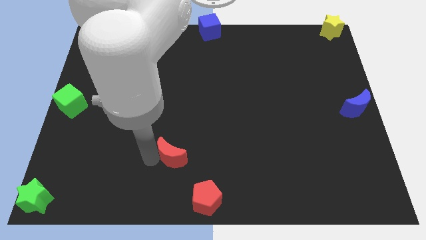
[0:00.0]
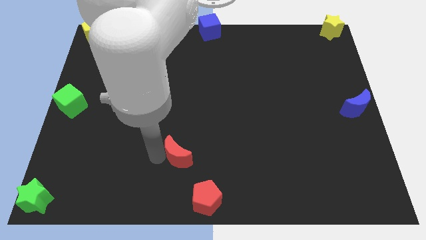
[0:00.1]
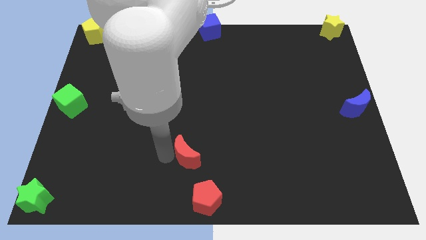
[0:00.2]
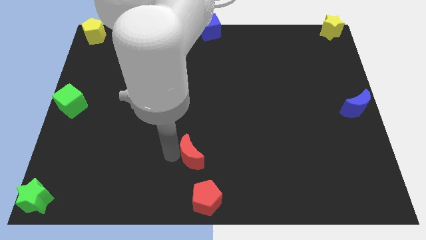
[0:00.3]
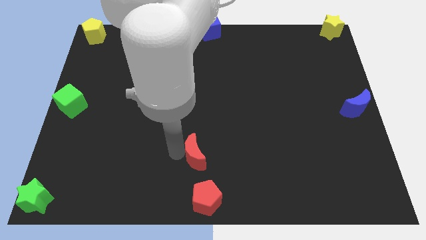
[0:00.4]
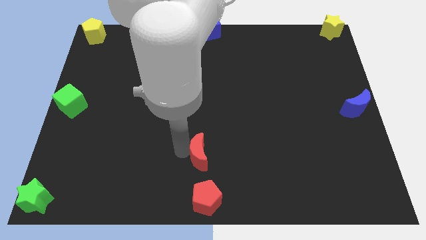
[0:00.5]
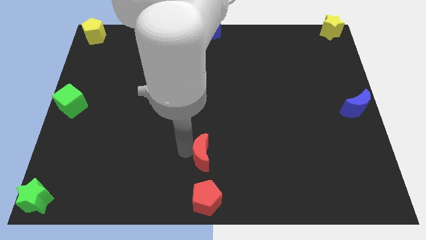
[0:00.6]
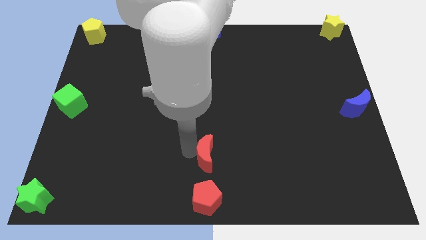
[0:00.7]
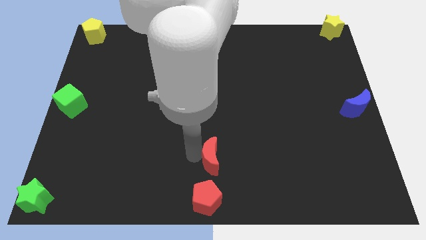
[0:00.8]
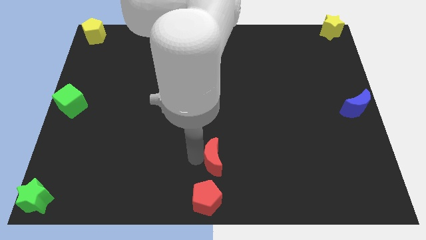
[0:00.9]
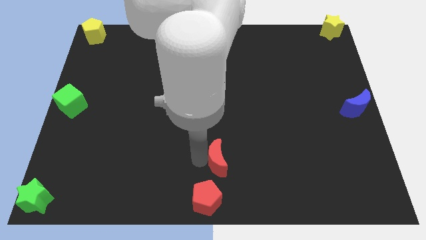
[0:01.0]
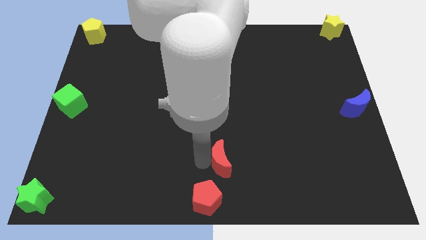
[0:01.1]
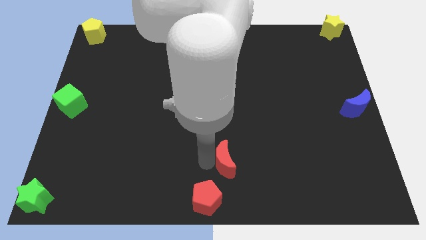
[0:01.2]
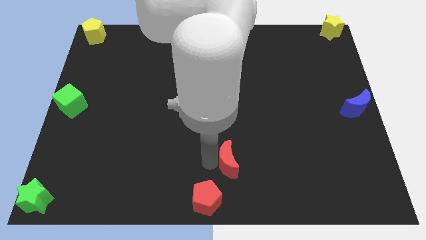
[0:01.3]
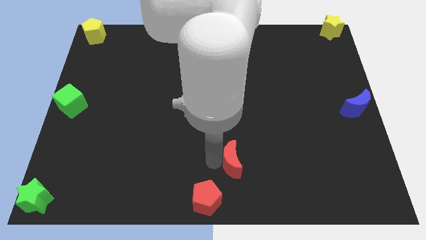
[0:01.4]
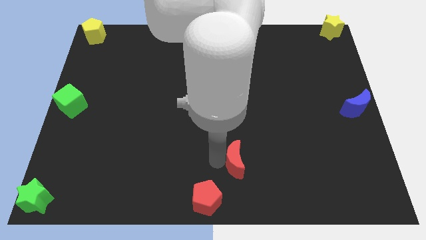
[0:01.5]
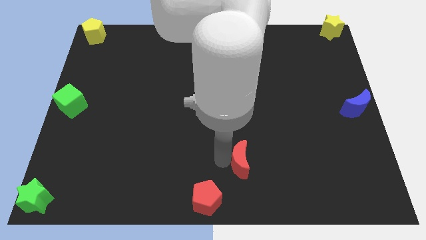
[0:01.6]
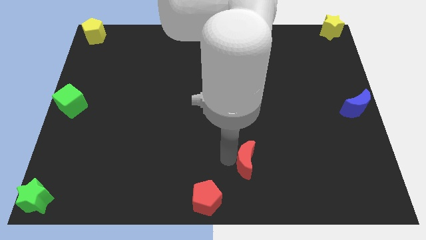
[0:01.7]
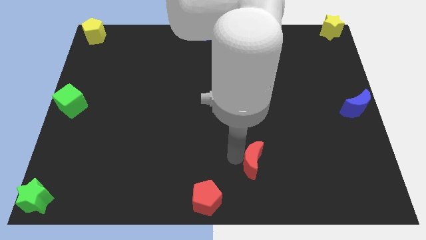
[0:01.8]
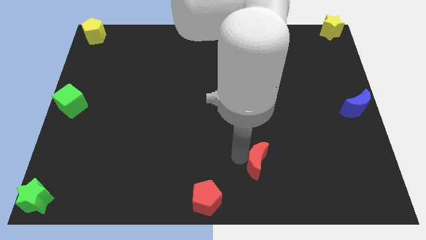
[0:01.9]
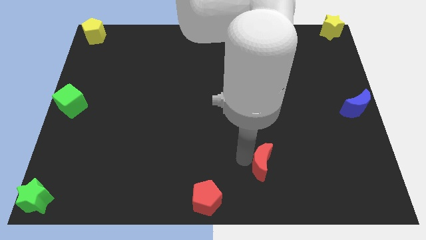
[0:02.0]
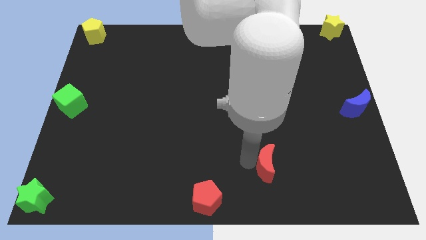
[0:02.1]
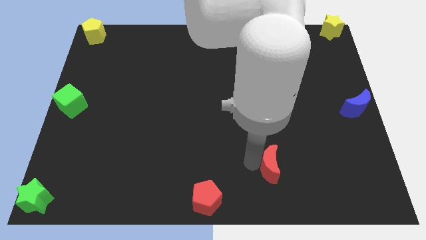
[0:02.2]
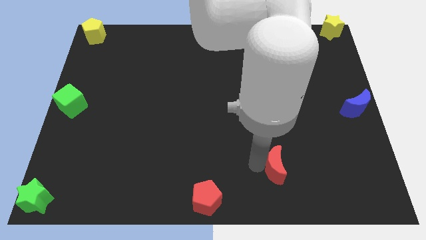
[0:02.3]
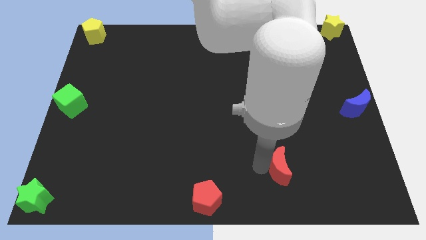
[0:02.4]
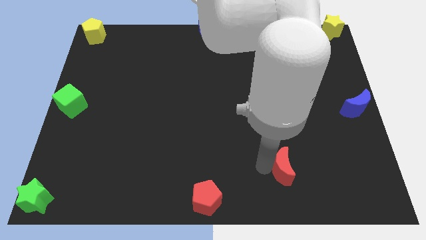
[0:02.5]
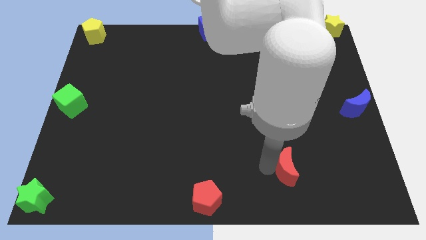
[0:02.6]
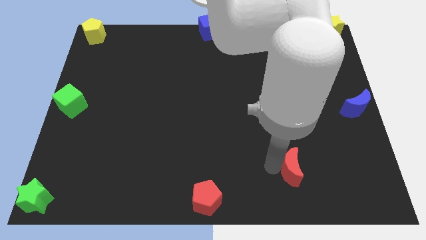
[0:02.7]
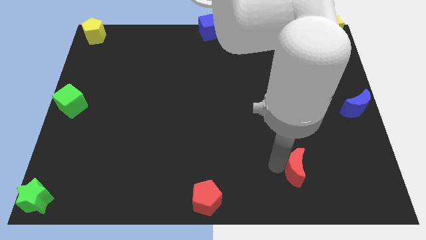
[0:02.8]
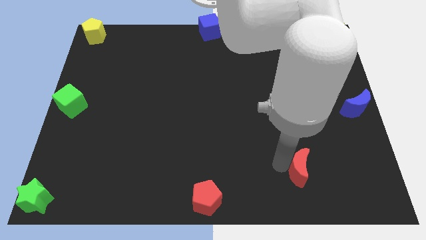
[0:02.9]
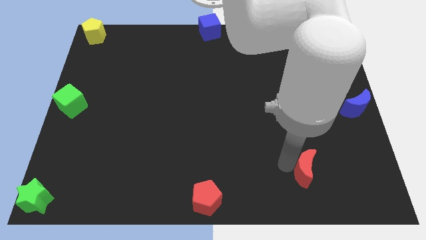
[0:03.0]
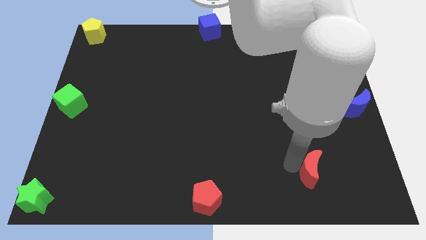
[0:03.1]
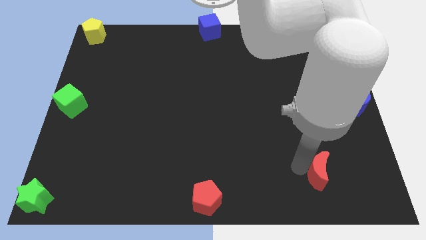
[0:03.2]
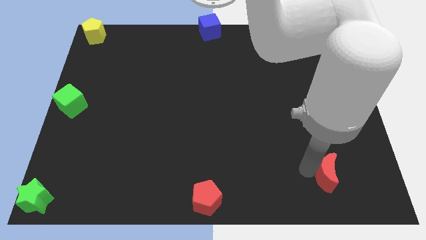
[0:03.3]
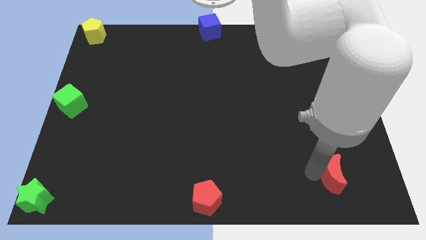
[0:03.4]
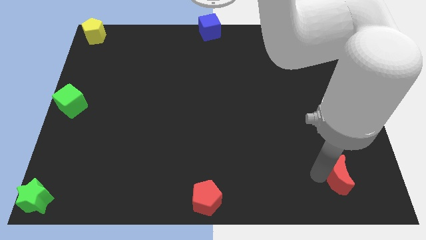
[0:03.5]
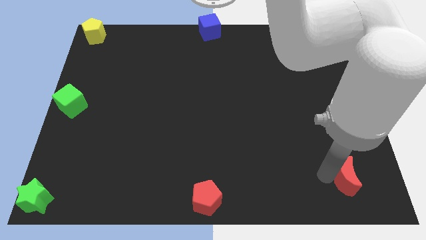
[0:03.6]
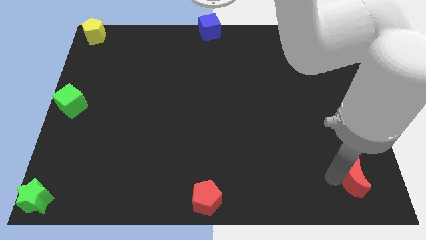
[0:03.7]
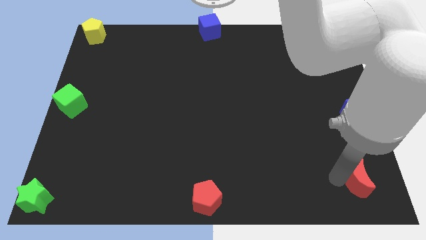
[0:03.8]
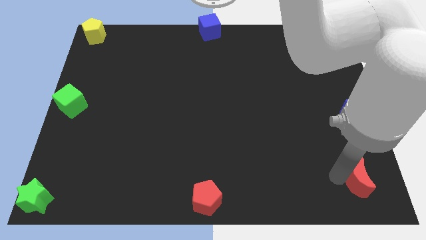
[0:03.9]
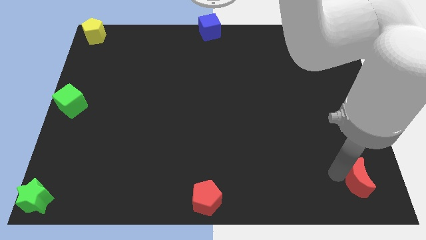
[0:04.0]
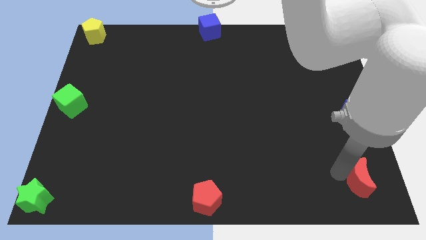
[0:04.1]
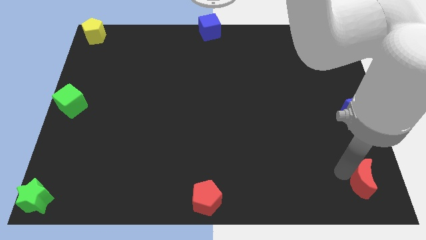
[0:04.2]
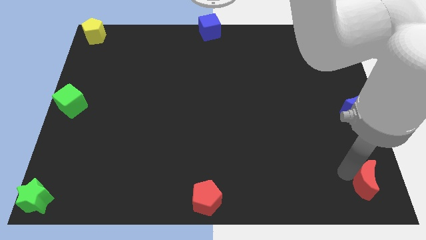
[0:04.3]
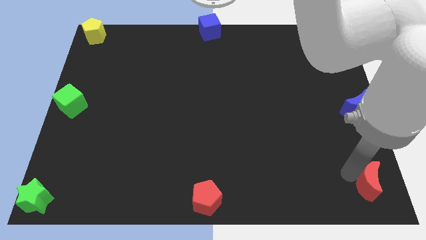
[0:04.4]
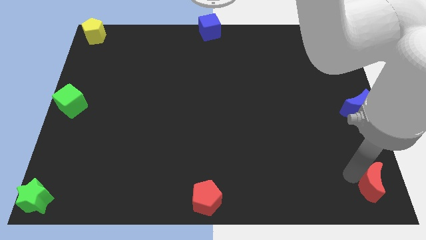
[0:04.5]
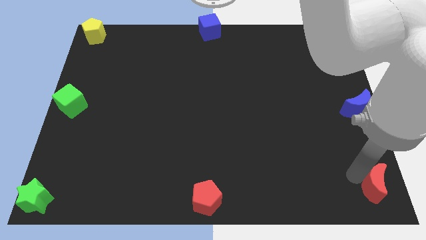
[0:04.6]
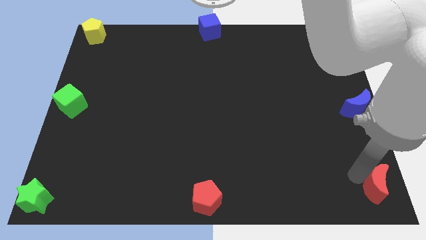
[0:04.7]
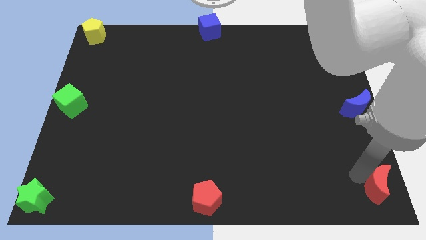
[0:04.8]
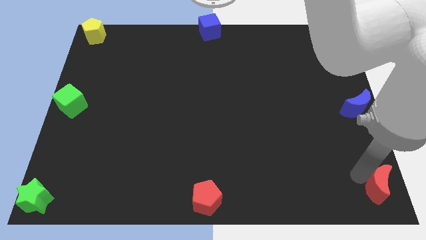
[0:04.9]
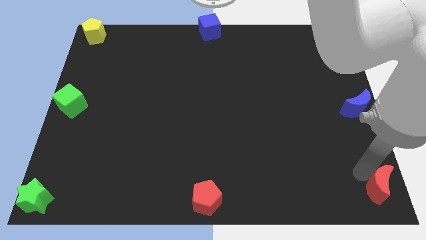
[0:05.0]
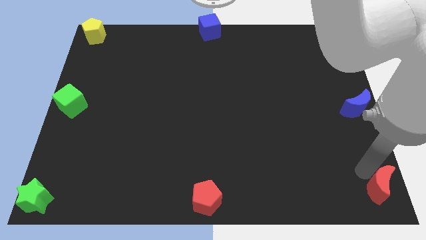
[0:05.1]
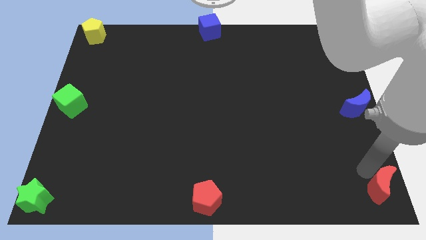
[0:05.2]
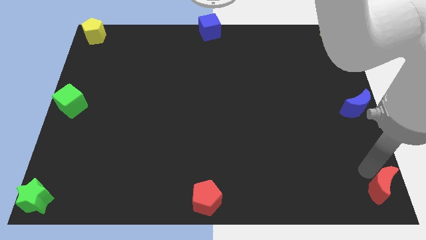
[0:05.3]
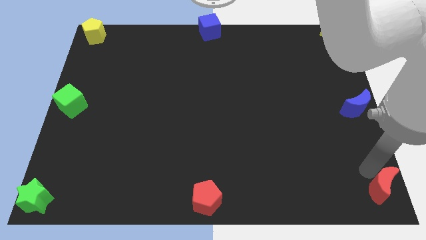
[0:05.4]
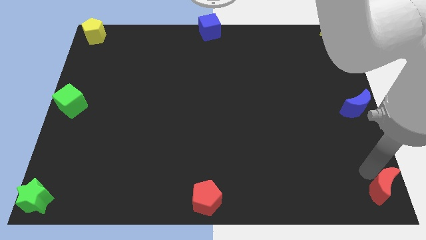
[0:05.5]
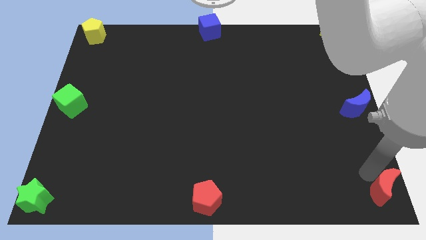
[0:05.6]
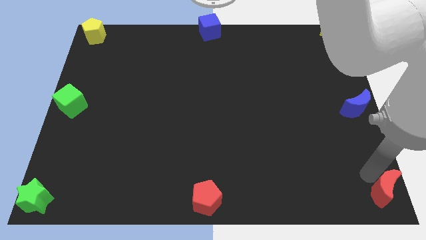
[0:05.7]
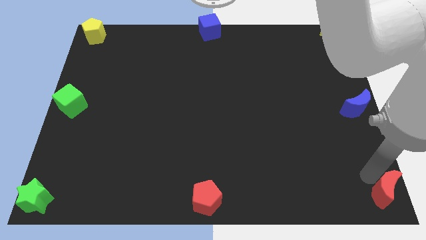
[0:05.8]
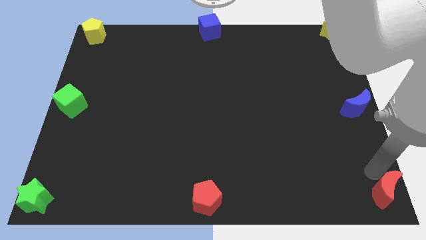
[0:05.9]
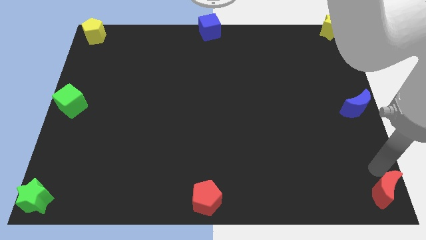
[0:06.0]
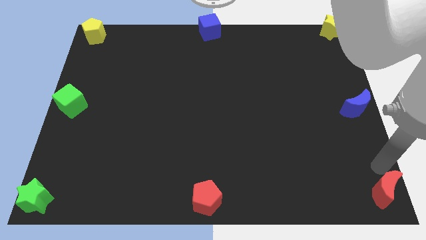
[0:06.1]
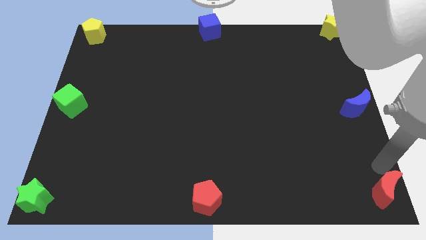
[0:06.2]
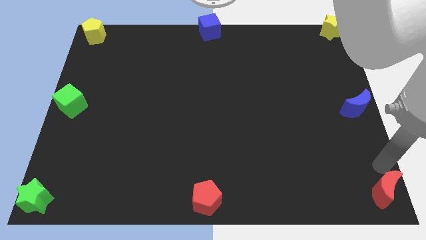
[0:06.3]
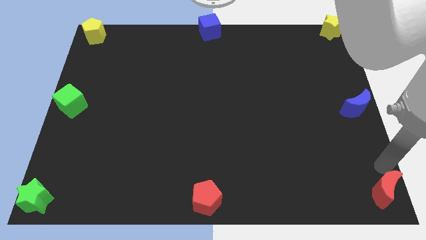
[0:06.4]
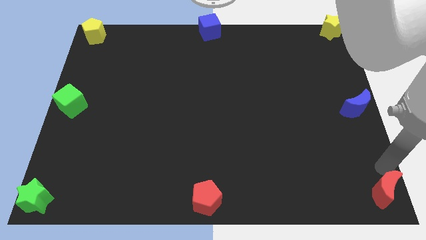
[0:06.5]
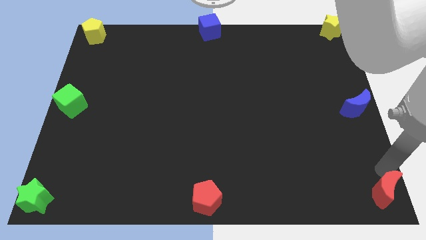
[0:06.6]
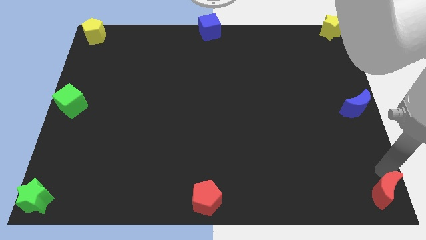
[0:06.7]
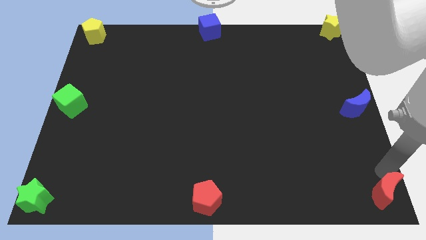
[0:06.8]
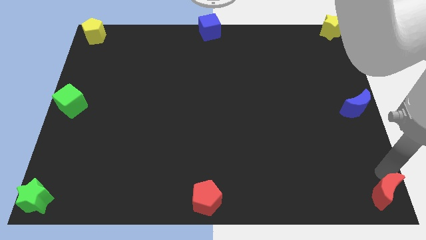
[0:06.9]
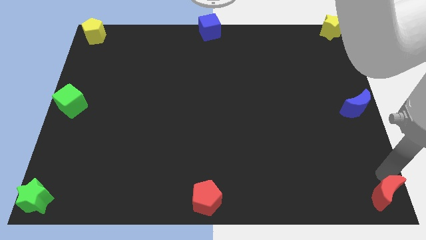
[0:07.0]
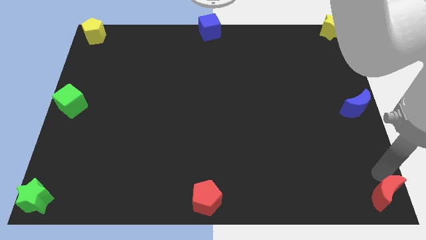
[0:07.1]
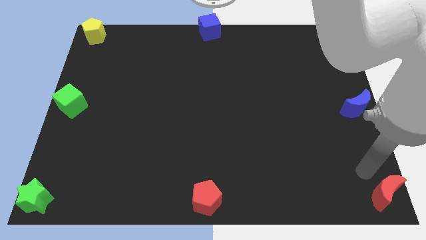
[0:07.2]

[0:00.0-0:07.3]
move the red crescent to the bottom right corner of the board

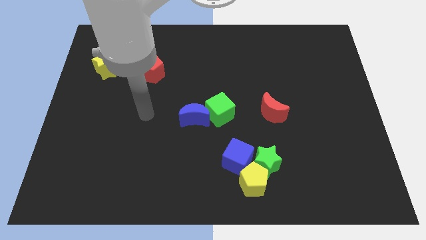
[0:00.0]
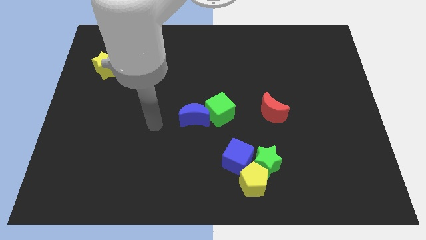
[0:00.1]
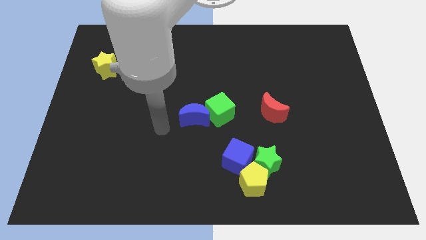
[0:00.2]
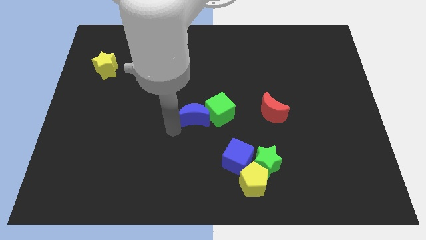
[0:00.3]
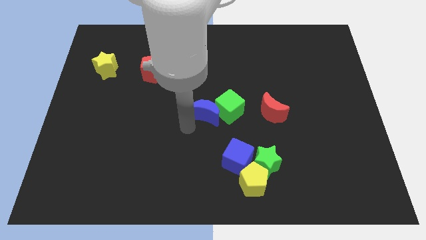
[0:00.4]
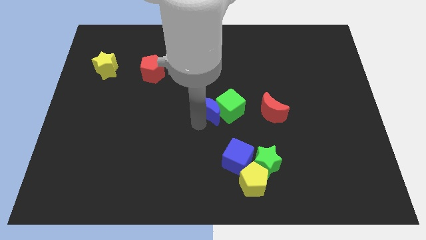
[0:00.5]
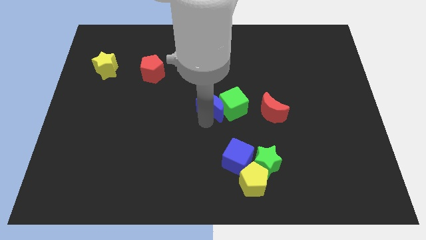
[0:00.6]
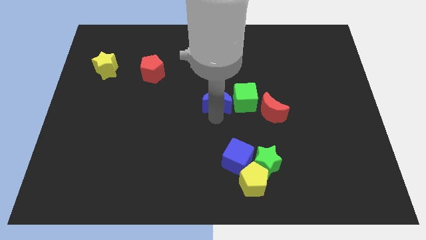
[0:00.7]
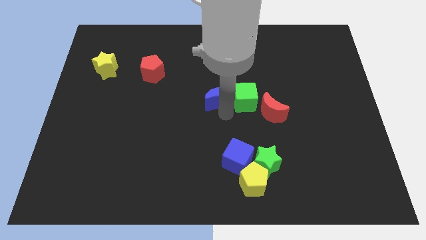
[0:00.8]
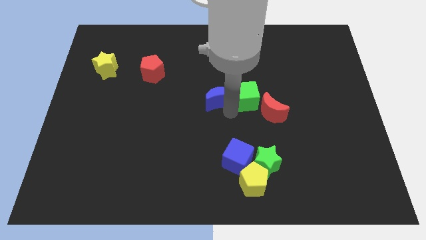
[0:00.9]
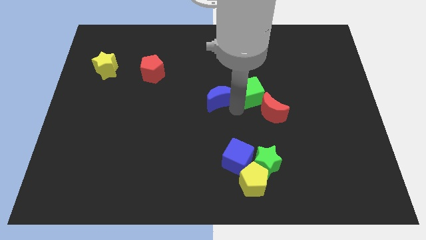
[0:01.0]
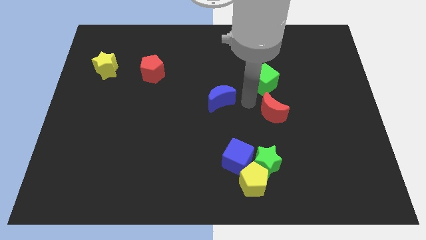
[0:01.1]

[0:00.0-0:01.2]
move the green cube and the blue crescent to the right of the board

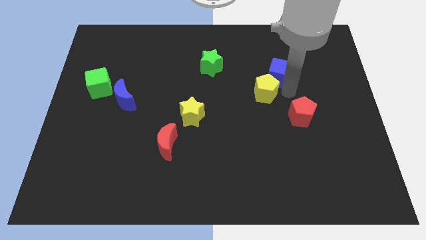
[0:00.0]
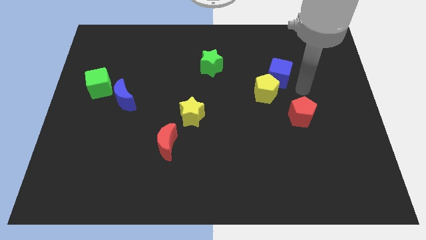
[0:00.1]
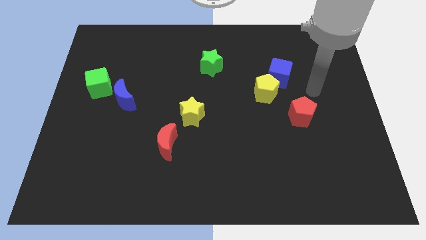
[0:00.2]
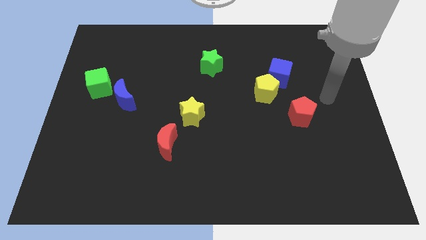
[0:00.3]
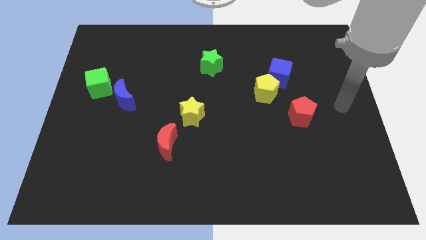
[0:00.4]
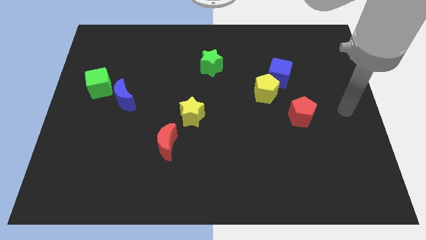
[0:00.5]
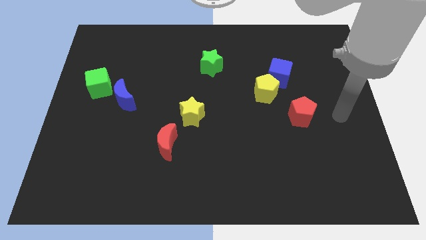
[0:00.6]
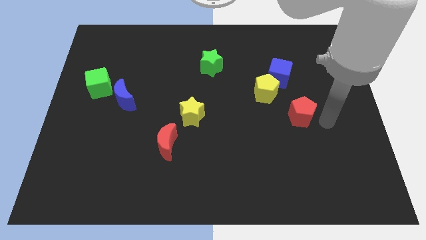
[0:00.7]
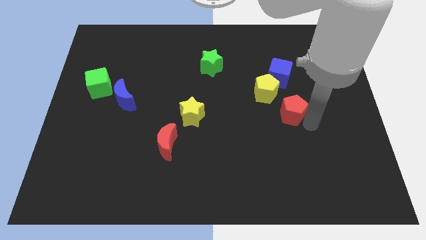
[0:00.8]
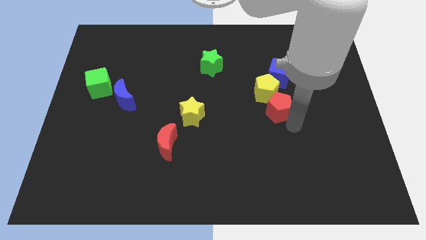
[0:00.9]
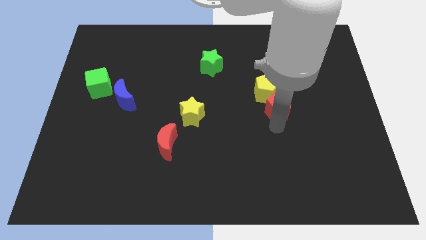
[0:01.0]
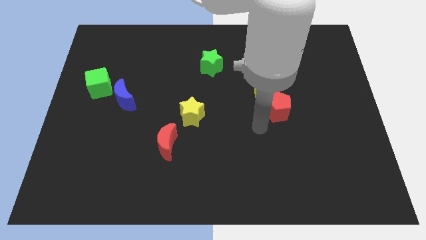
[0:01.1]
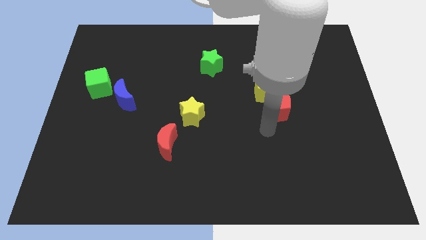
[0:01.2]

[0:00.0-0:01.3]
place the red pentagon close to the yellow pentagon
